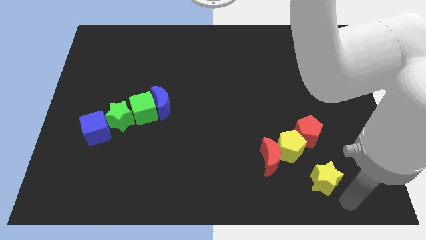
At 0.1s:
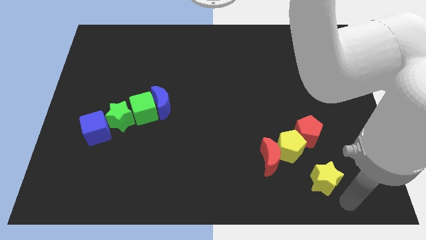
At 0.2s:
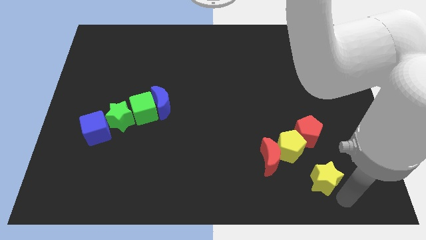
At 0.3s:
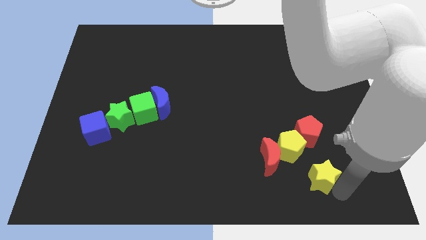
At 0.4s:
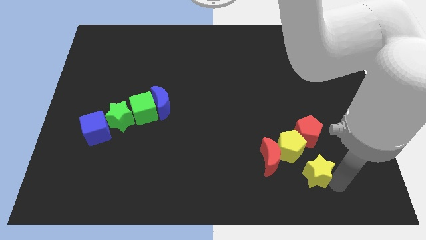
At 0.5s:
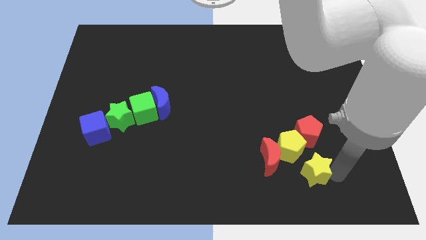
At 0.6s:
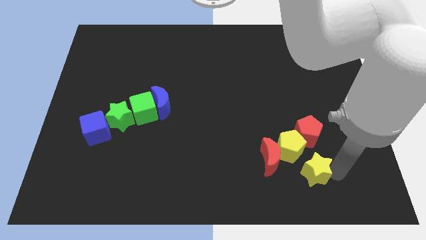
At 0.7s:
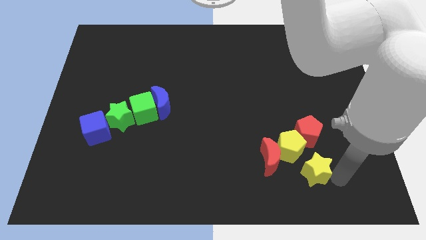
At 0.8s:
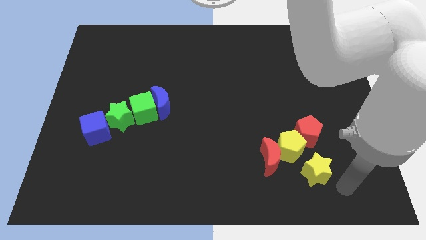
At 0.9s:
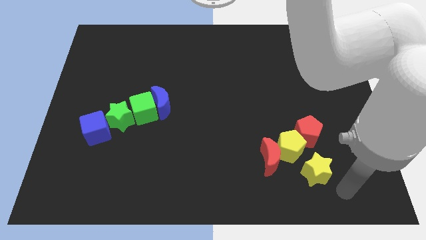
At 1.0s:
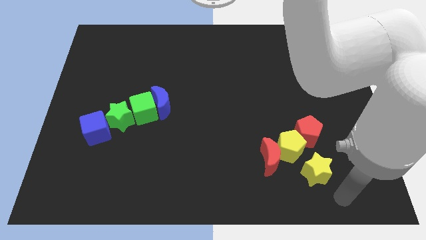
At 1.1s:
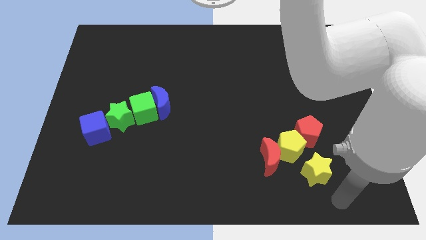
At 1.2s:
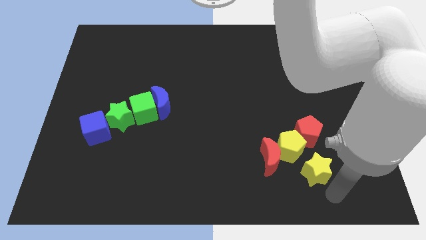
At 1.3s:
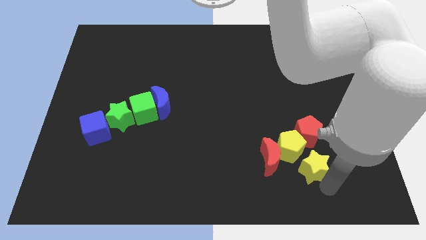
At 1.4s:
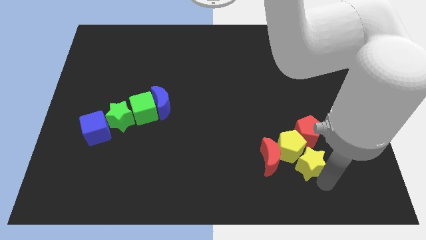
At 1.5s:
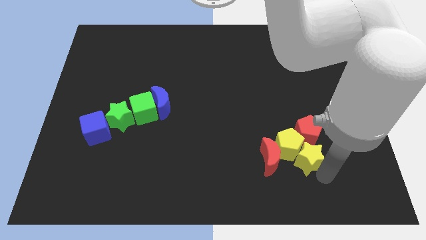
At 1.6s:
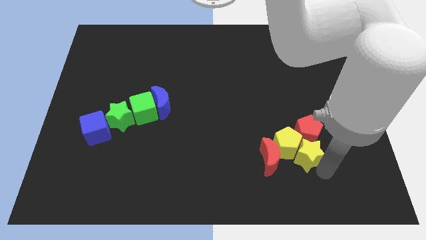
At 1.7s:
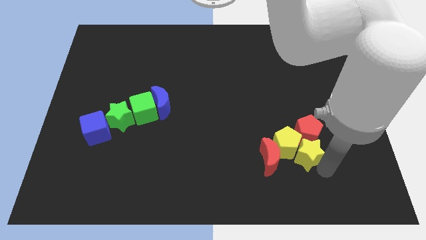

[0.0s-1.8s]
move the yellow star into the yellow pentagon

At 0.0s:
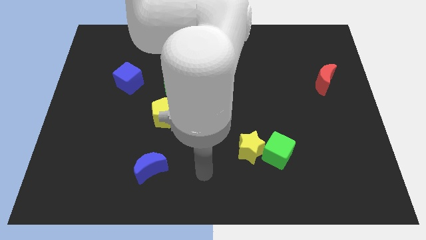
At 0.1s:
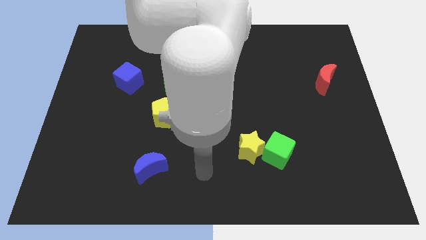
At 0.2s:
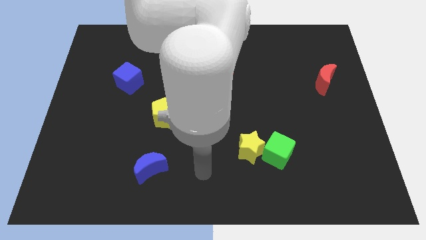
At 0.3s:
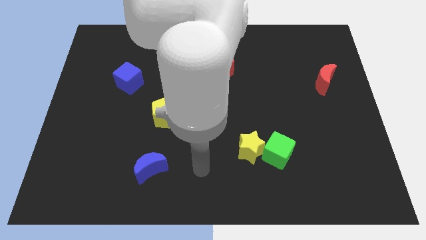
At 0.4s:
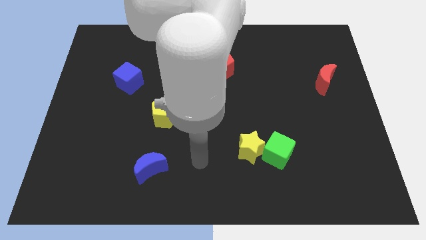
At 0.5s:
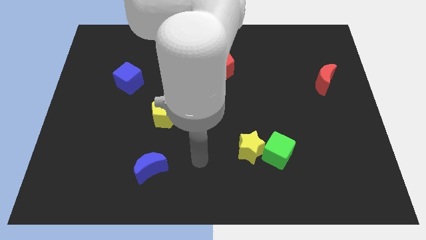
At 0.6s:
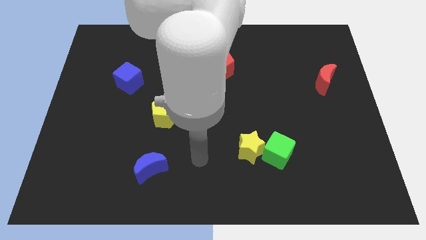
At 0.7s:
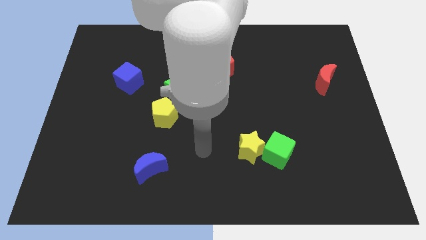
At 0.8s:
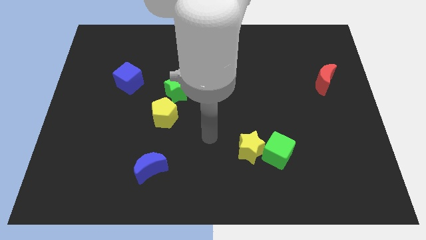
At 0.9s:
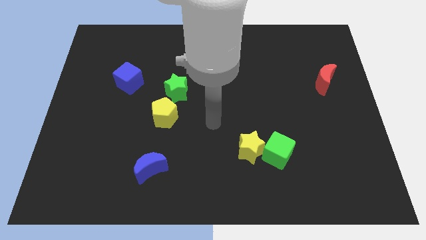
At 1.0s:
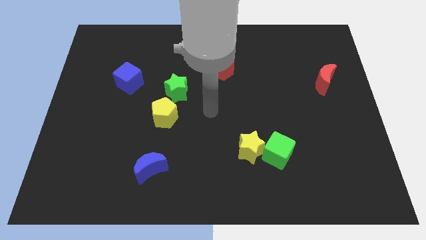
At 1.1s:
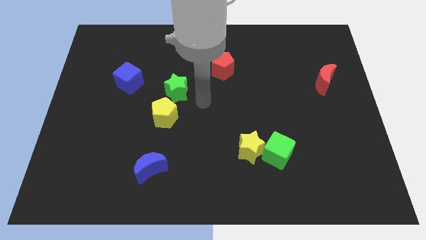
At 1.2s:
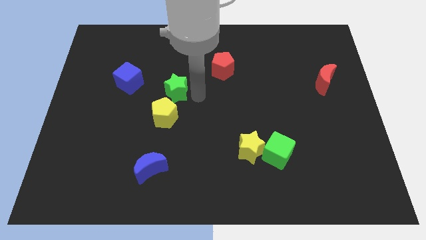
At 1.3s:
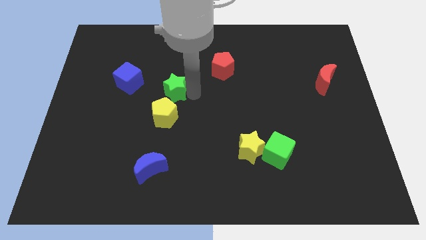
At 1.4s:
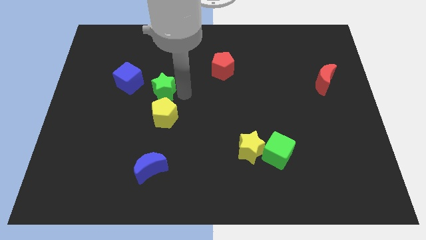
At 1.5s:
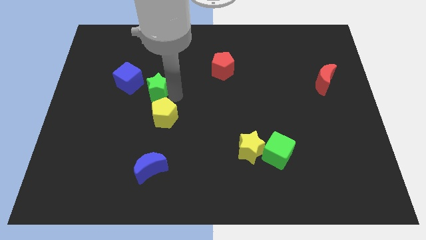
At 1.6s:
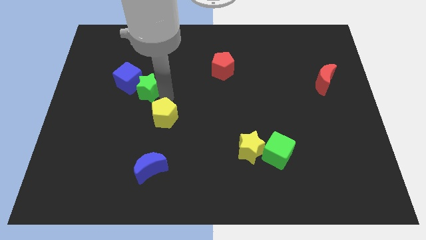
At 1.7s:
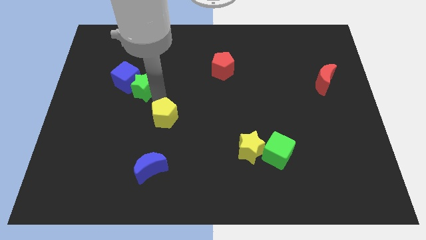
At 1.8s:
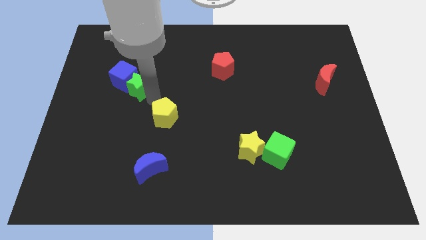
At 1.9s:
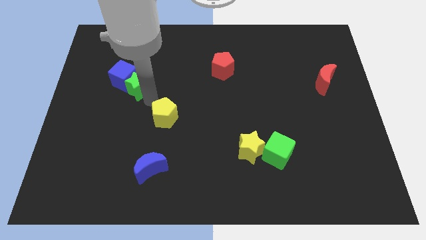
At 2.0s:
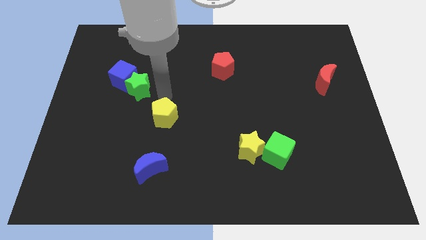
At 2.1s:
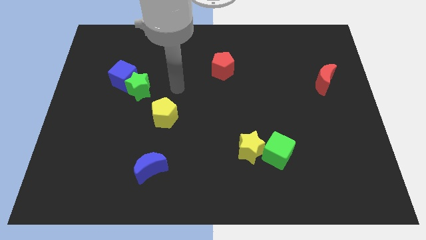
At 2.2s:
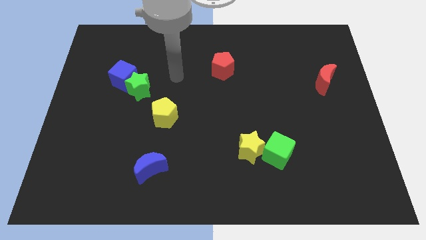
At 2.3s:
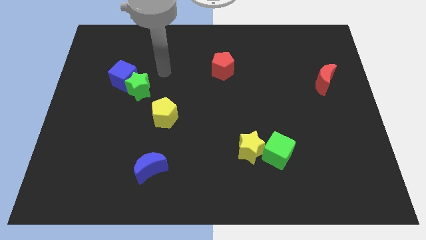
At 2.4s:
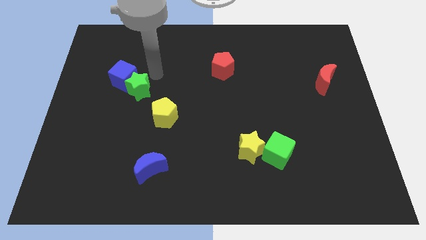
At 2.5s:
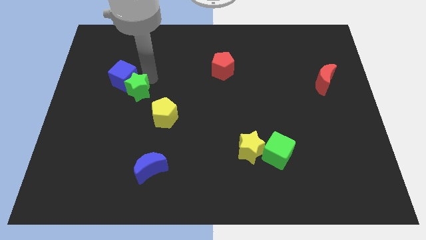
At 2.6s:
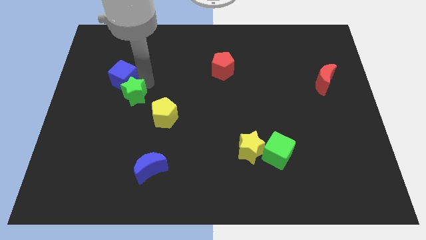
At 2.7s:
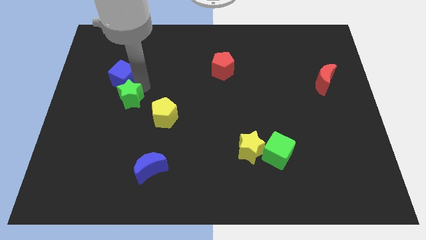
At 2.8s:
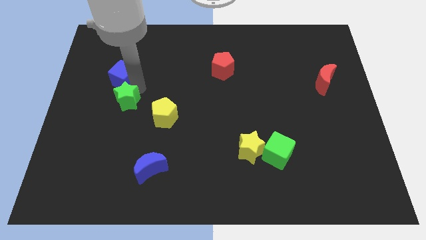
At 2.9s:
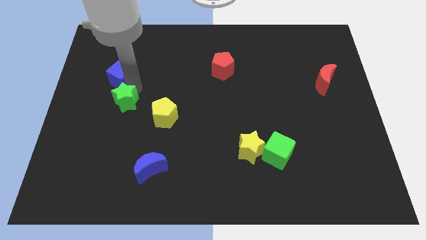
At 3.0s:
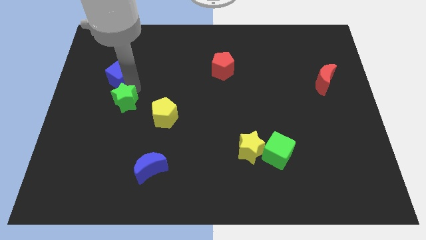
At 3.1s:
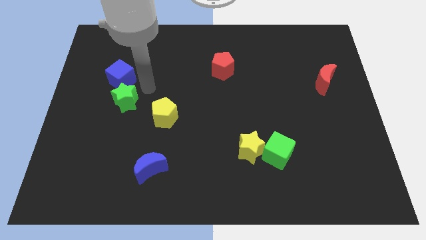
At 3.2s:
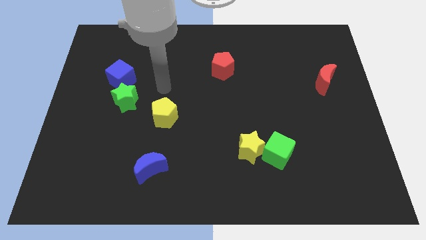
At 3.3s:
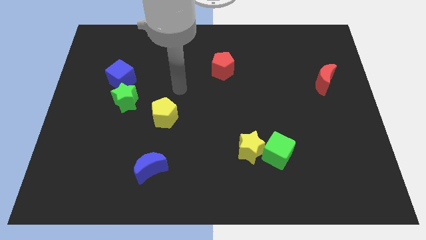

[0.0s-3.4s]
push the green star to the bottom of blue cube

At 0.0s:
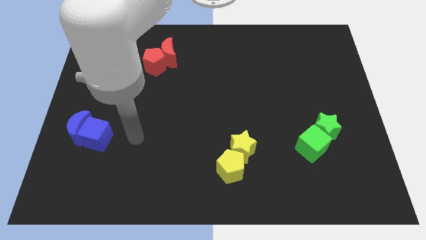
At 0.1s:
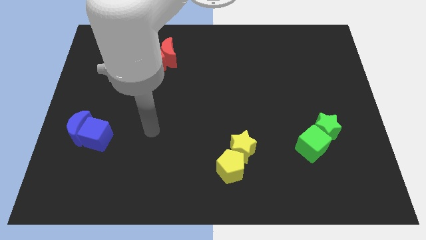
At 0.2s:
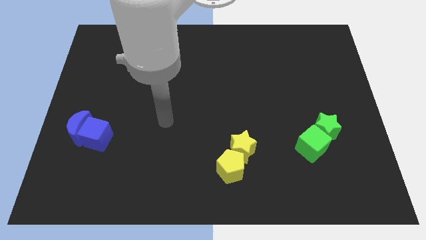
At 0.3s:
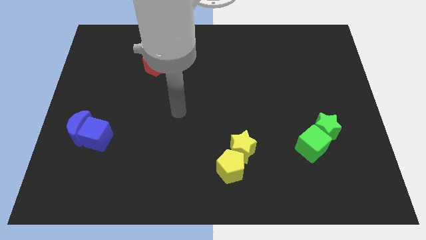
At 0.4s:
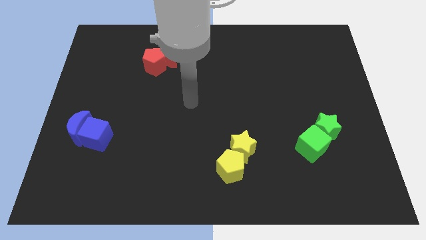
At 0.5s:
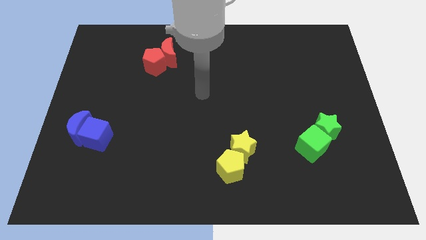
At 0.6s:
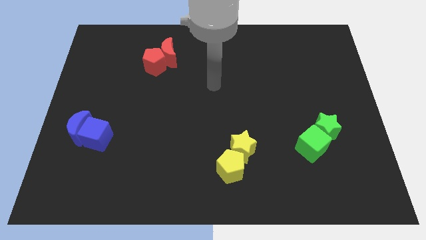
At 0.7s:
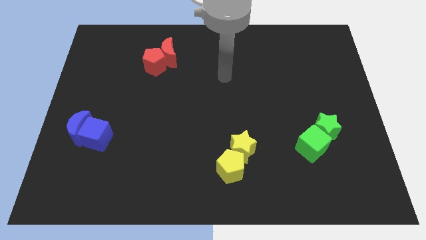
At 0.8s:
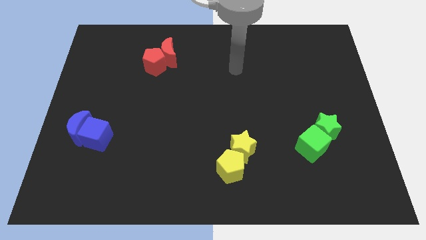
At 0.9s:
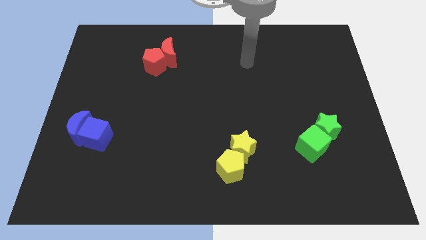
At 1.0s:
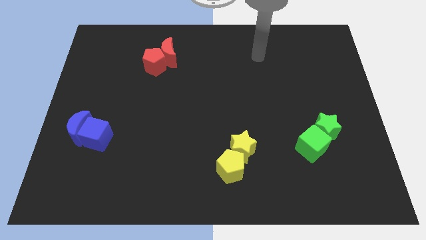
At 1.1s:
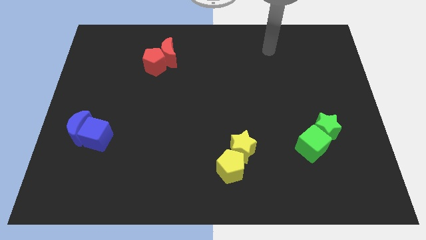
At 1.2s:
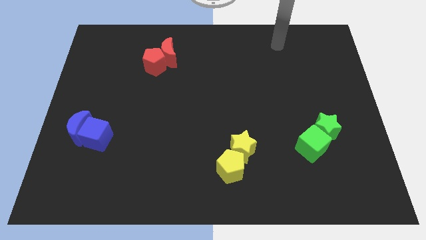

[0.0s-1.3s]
move your arm towards the top right side of the board

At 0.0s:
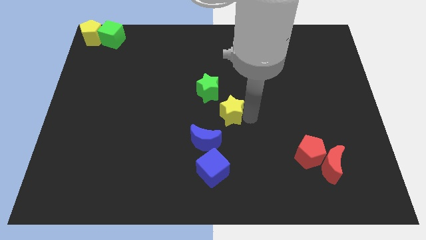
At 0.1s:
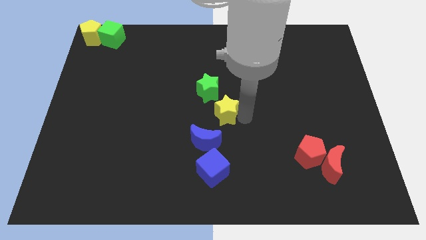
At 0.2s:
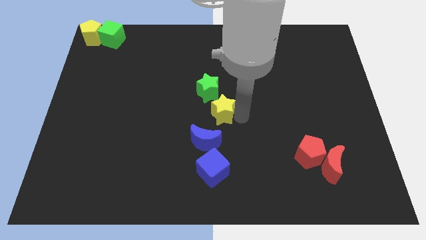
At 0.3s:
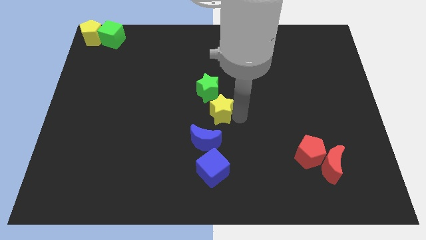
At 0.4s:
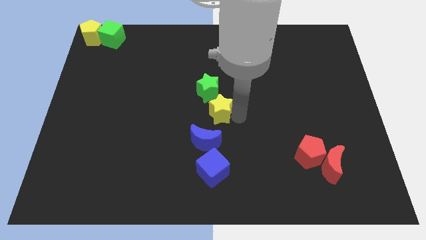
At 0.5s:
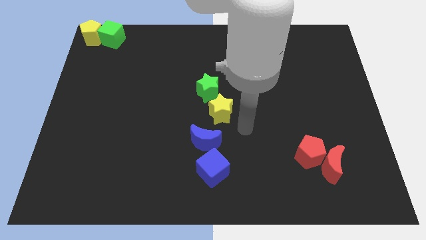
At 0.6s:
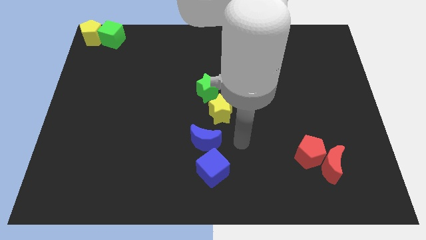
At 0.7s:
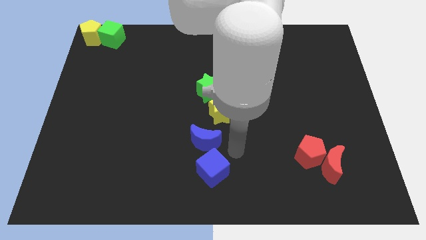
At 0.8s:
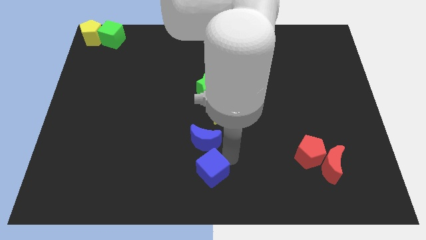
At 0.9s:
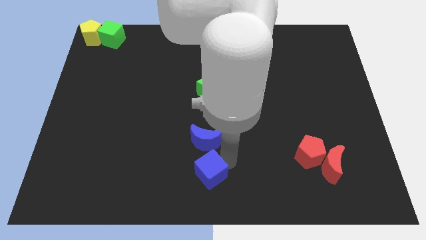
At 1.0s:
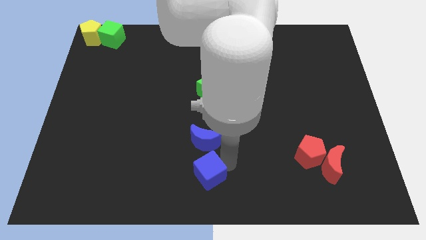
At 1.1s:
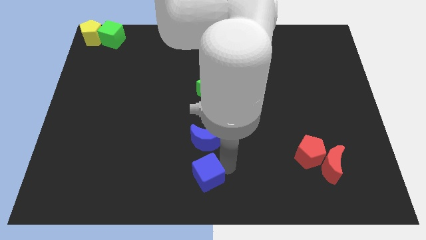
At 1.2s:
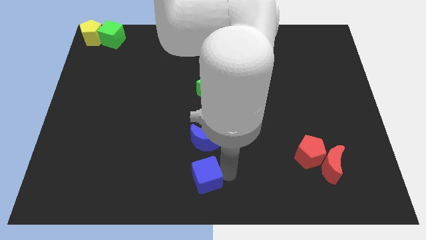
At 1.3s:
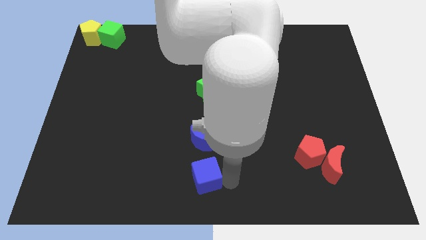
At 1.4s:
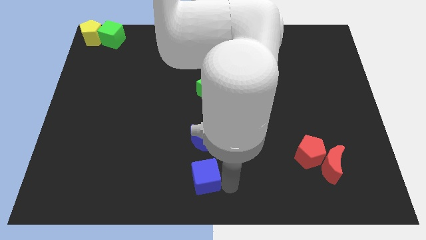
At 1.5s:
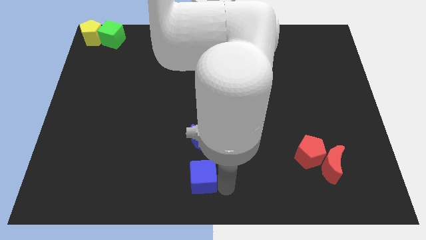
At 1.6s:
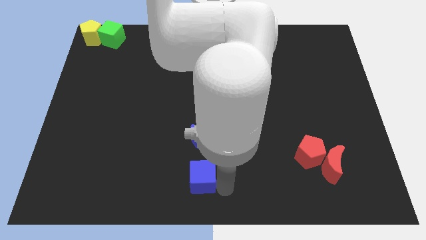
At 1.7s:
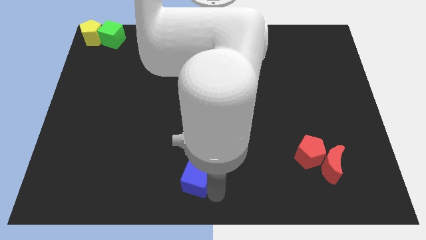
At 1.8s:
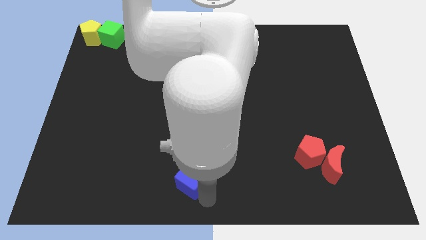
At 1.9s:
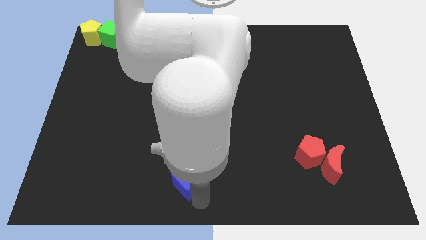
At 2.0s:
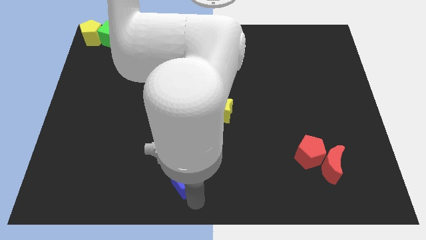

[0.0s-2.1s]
push blue cube towards bottom center
